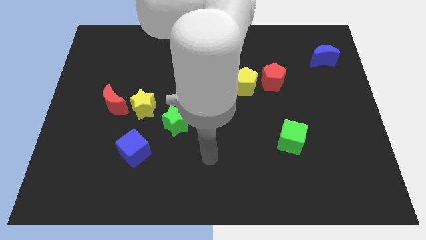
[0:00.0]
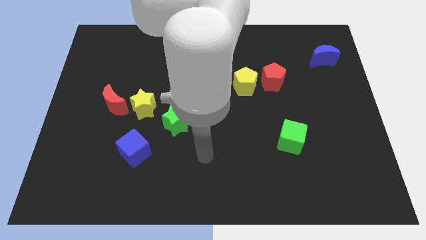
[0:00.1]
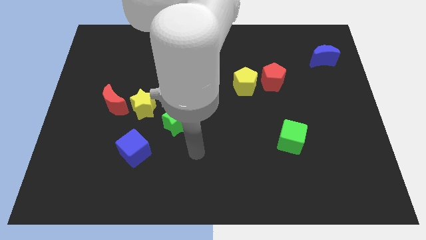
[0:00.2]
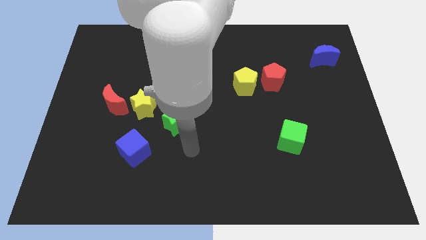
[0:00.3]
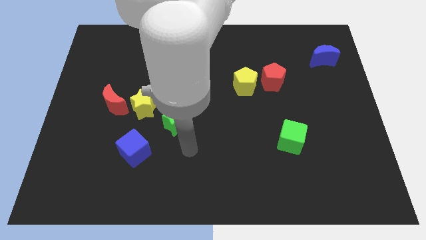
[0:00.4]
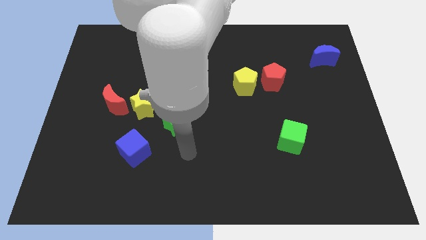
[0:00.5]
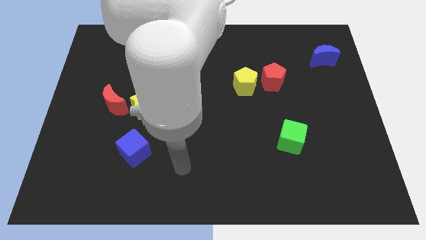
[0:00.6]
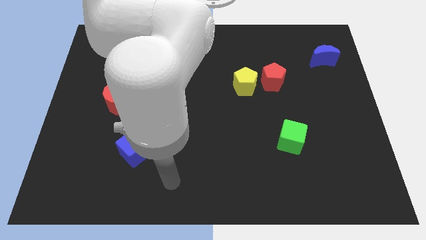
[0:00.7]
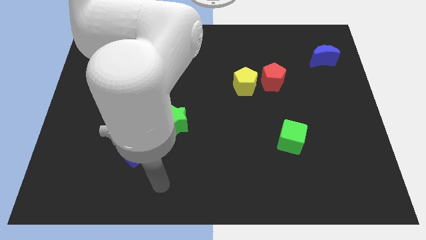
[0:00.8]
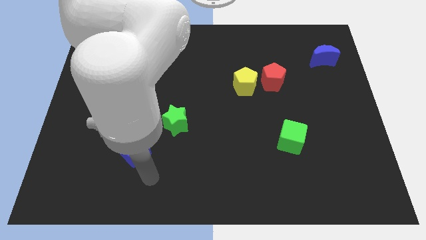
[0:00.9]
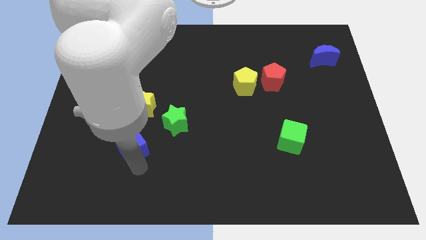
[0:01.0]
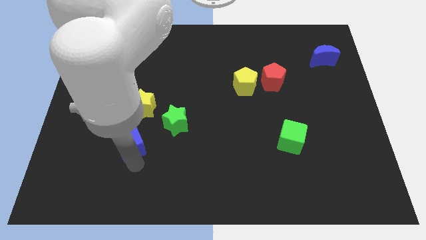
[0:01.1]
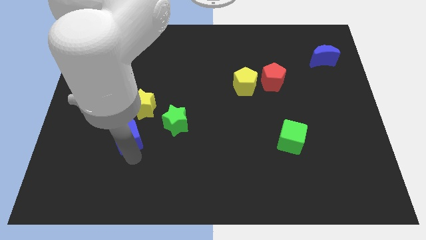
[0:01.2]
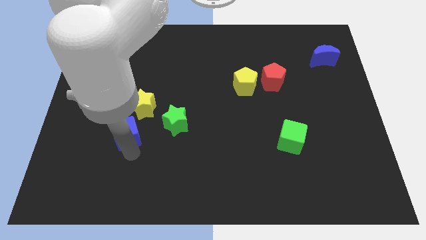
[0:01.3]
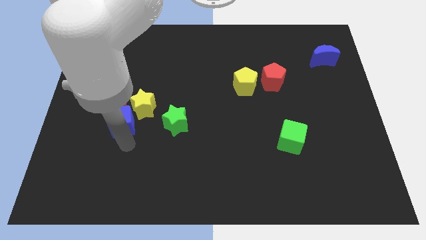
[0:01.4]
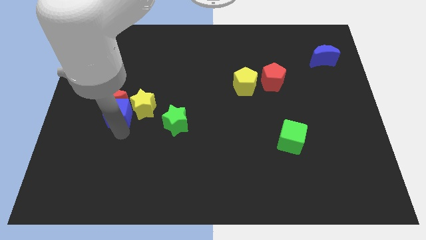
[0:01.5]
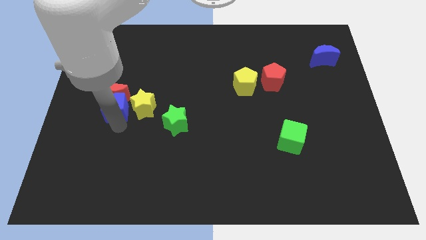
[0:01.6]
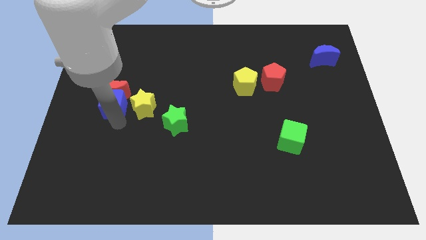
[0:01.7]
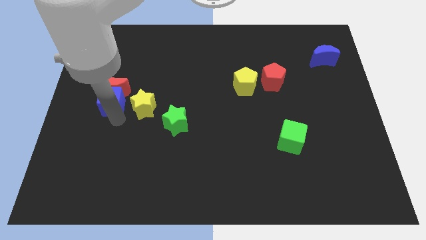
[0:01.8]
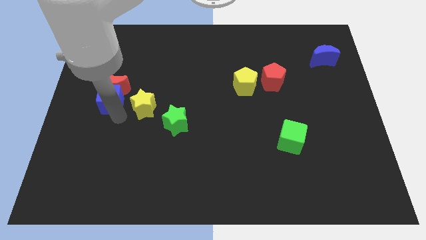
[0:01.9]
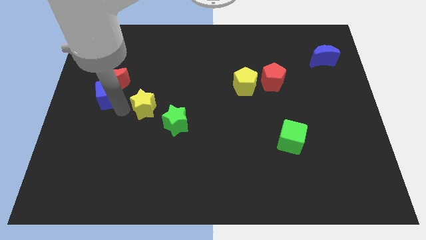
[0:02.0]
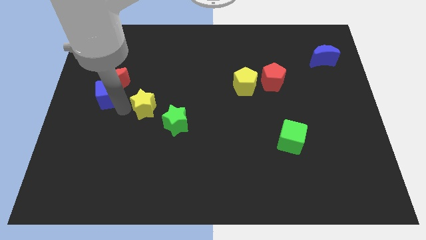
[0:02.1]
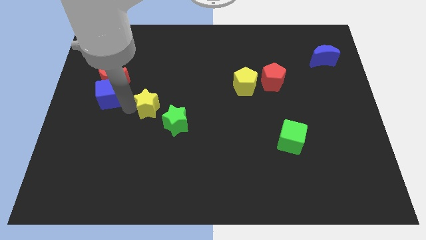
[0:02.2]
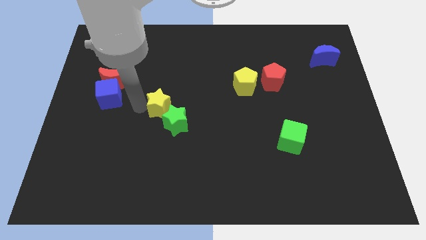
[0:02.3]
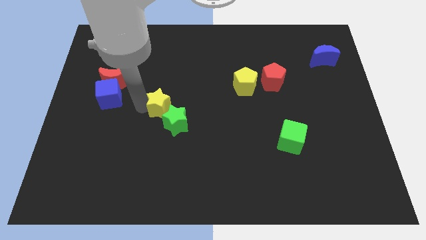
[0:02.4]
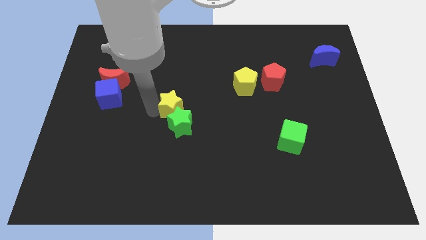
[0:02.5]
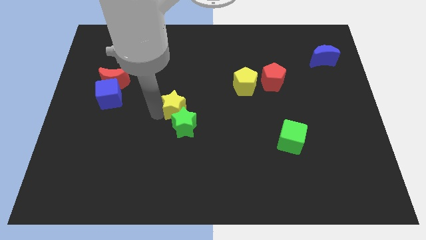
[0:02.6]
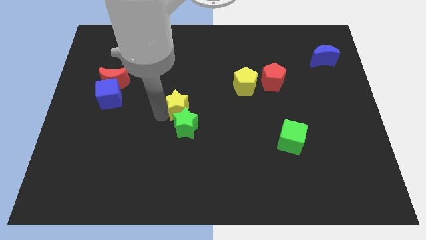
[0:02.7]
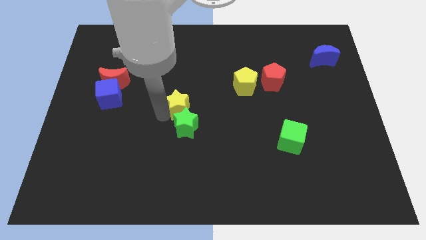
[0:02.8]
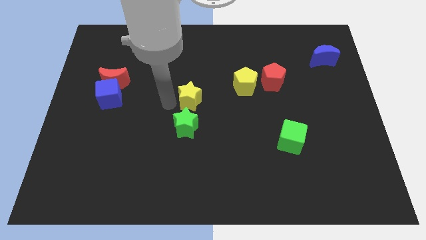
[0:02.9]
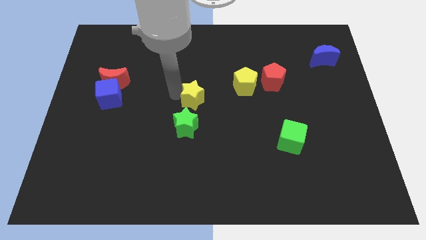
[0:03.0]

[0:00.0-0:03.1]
push yellow star above green star

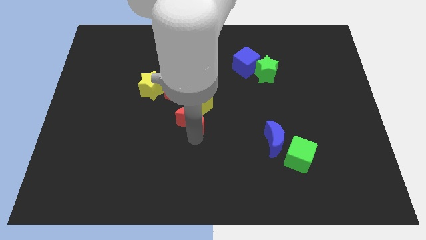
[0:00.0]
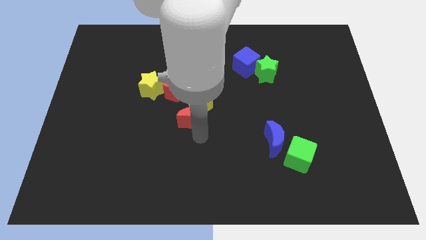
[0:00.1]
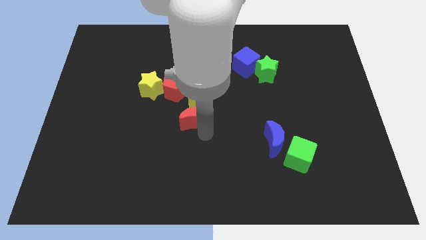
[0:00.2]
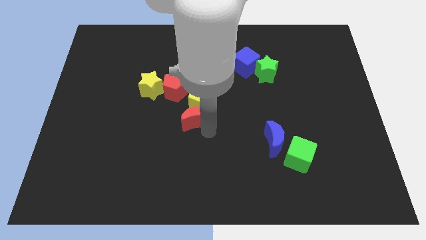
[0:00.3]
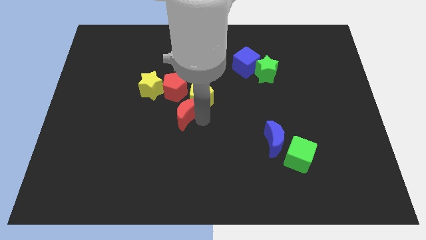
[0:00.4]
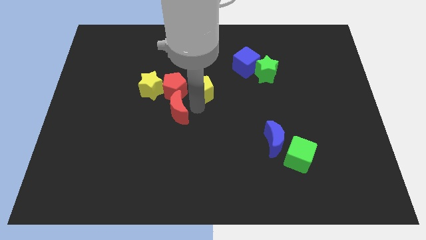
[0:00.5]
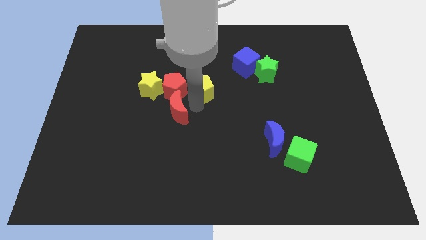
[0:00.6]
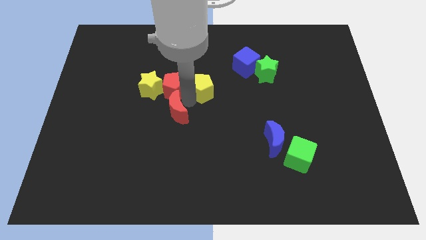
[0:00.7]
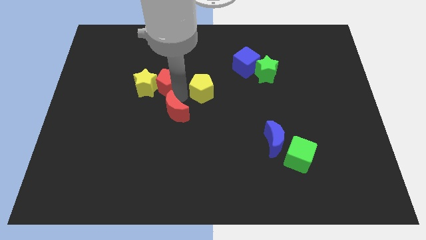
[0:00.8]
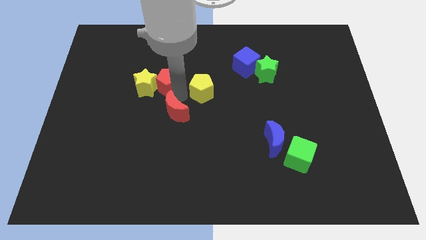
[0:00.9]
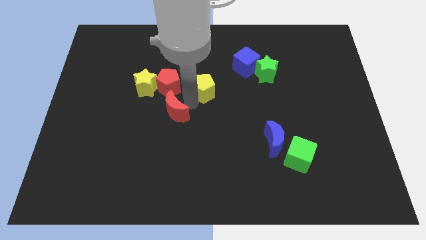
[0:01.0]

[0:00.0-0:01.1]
move the red crescent to the bottom of the red pentagon

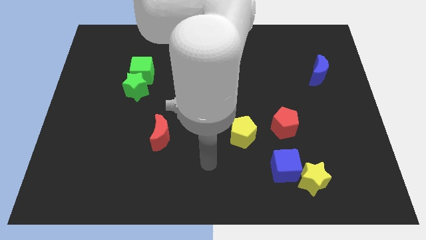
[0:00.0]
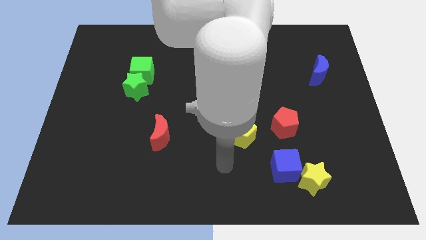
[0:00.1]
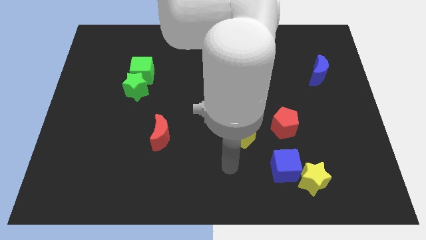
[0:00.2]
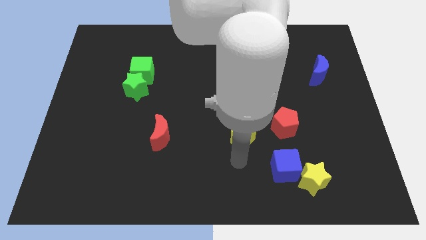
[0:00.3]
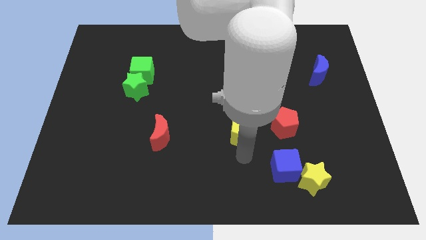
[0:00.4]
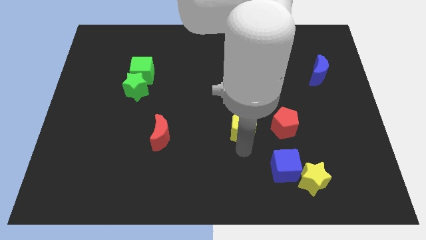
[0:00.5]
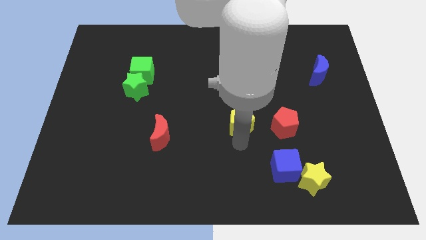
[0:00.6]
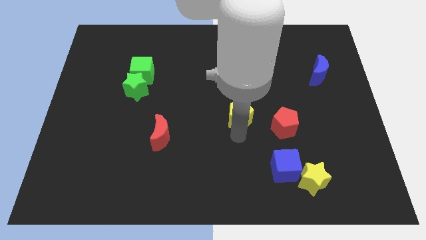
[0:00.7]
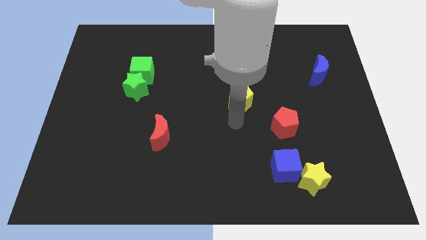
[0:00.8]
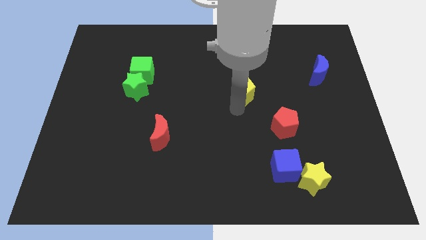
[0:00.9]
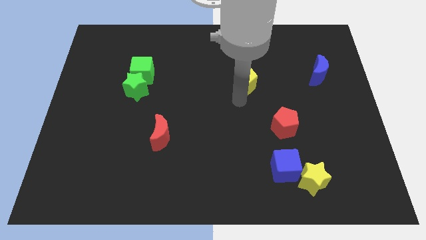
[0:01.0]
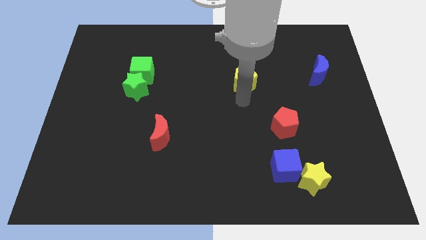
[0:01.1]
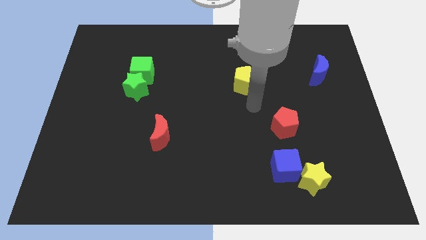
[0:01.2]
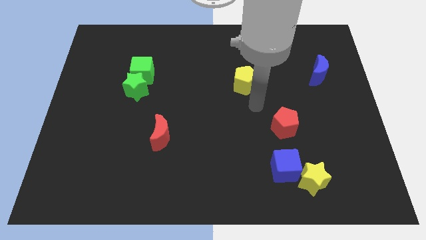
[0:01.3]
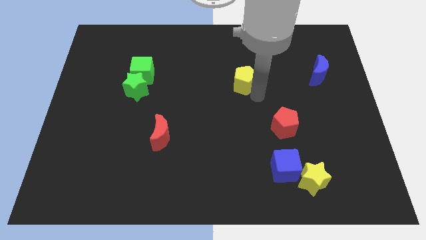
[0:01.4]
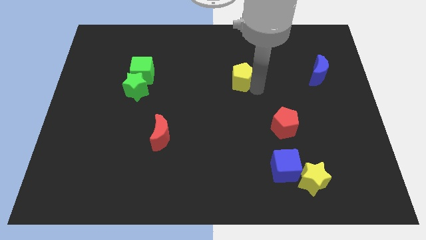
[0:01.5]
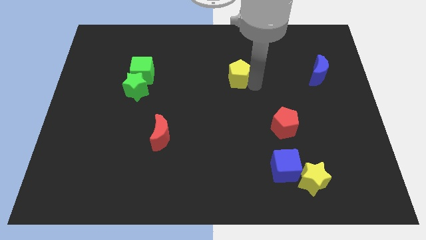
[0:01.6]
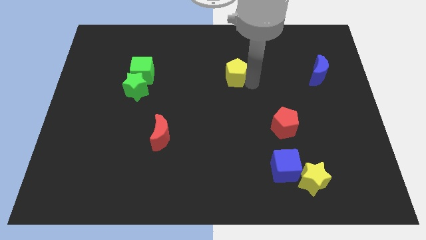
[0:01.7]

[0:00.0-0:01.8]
move the yellow pentagon horizontal to the green cube

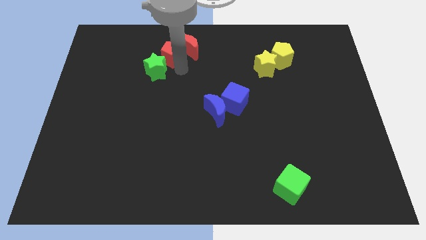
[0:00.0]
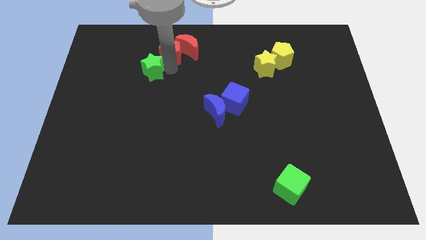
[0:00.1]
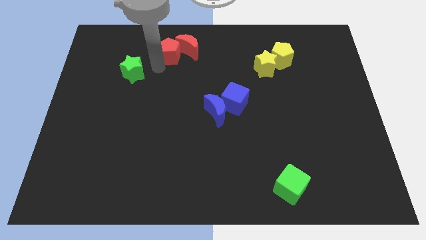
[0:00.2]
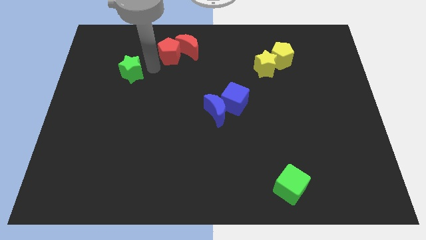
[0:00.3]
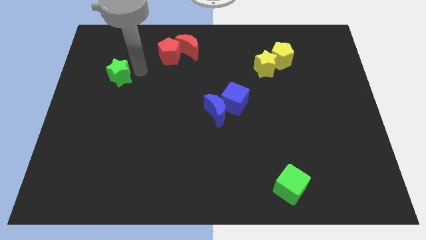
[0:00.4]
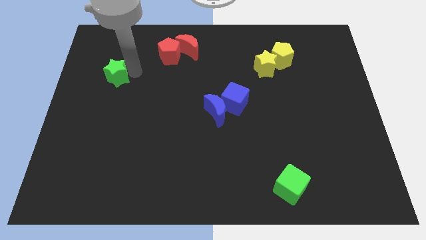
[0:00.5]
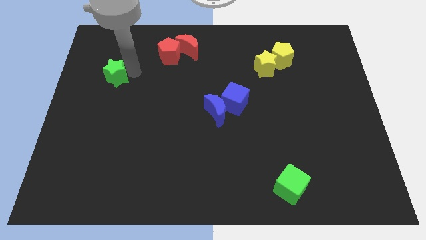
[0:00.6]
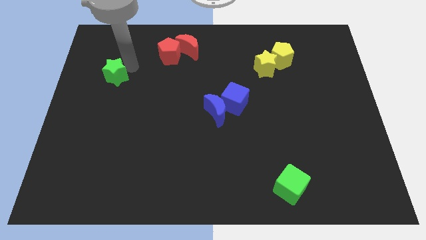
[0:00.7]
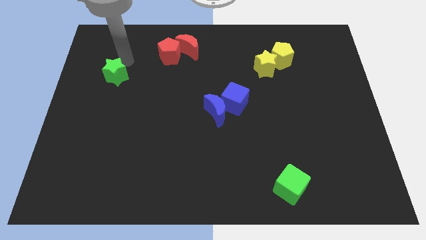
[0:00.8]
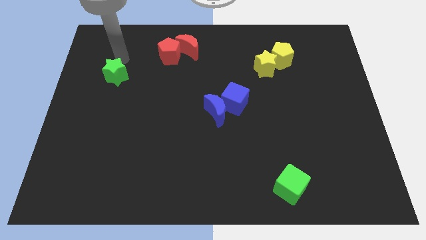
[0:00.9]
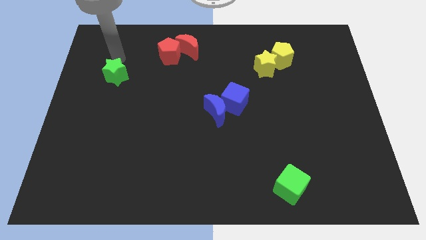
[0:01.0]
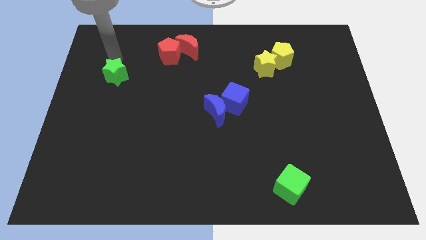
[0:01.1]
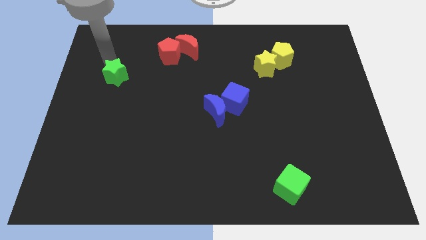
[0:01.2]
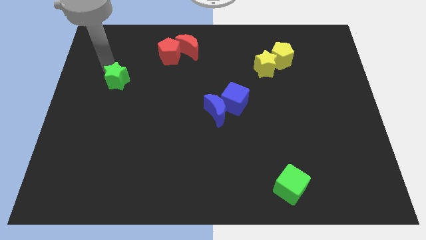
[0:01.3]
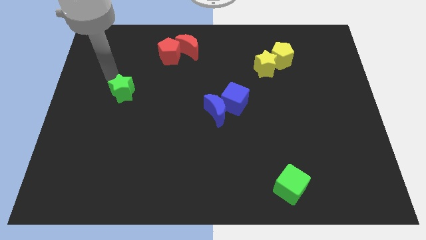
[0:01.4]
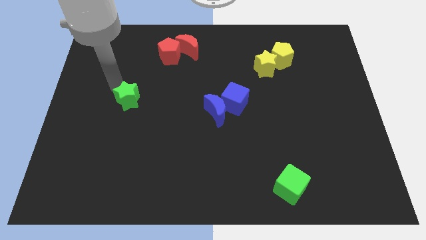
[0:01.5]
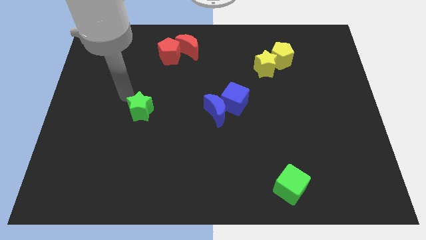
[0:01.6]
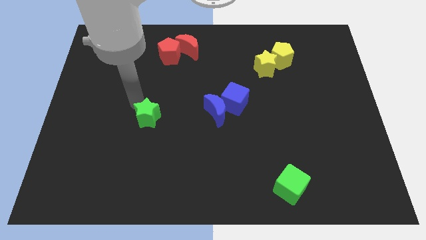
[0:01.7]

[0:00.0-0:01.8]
move the green star towards bottom

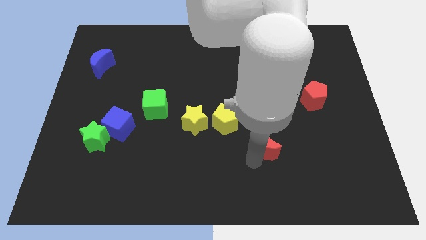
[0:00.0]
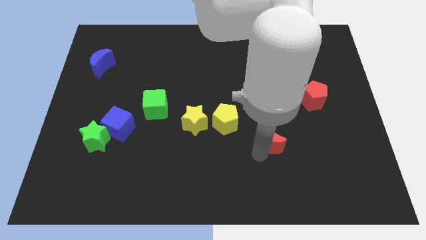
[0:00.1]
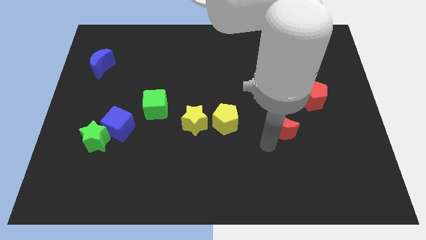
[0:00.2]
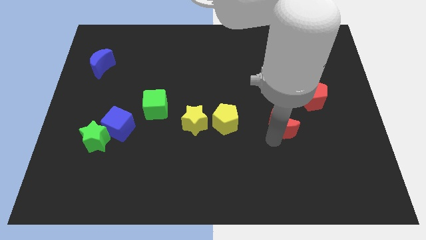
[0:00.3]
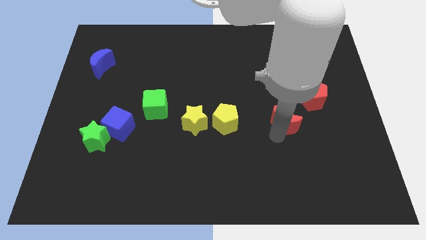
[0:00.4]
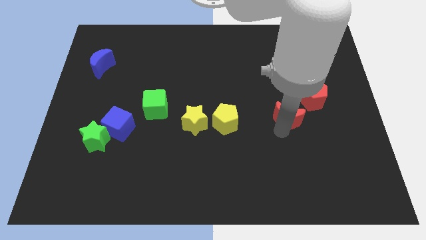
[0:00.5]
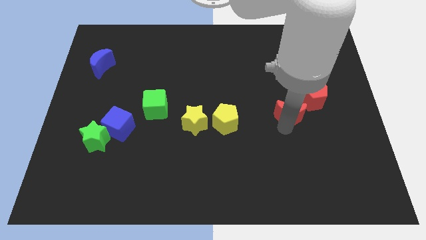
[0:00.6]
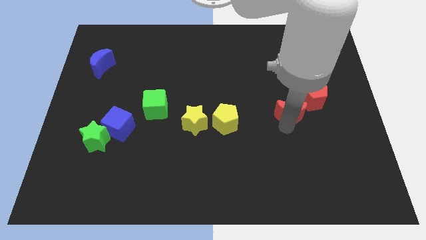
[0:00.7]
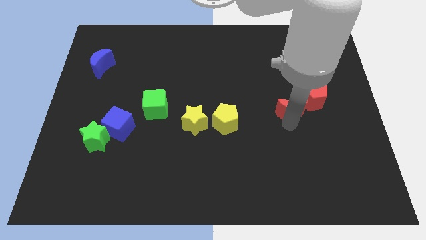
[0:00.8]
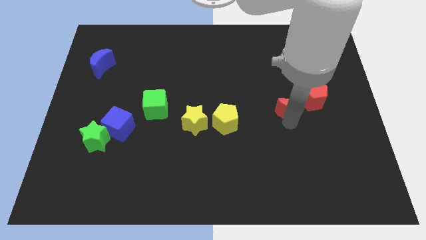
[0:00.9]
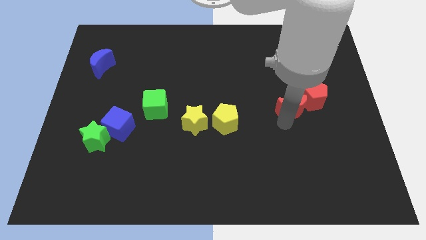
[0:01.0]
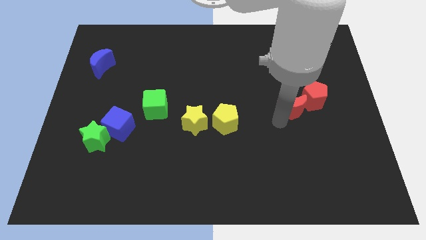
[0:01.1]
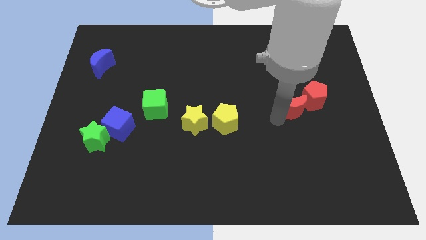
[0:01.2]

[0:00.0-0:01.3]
place red crescent beside red pentagon
